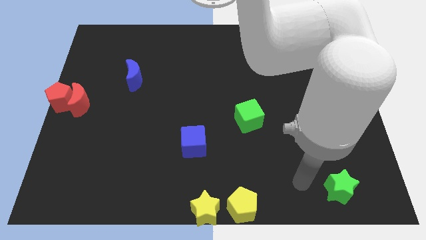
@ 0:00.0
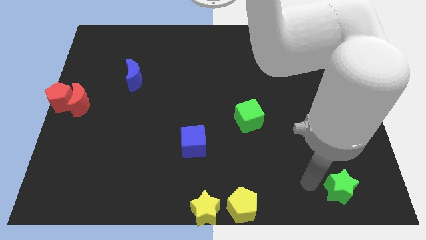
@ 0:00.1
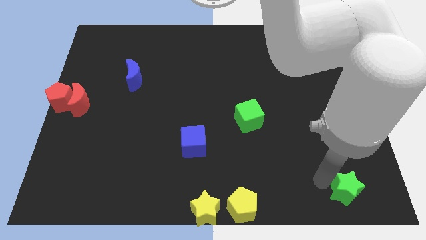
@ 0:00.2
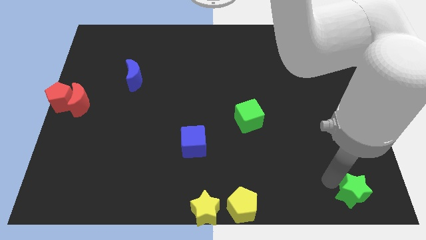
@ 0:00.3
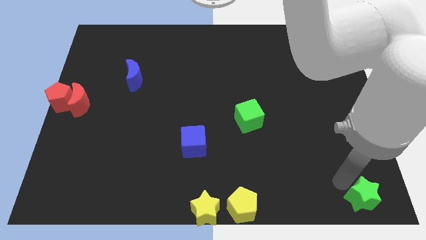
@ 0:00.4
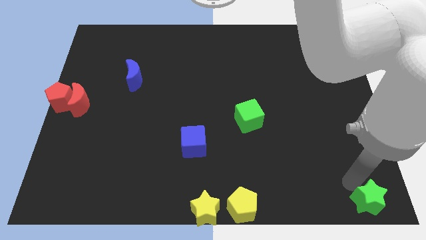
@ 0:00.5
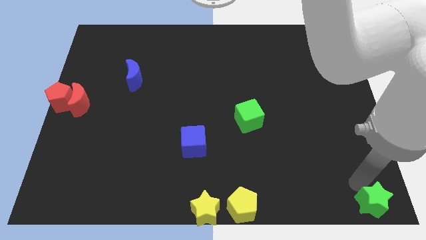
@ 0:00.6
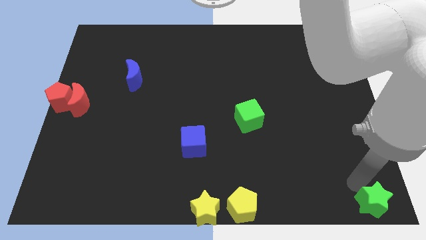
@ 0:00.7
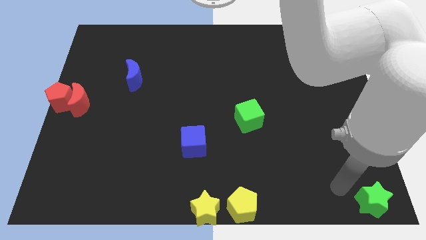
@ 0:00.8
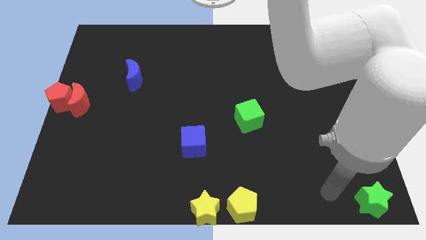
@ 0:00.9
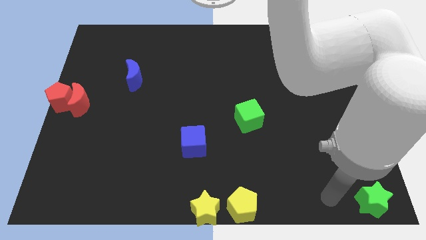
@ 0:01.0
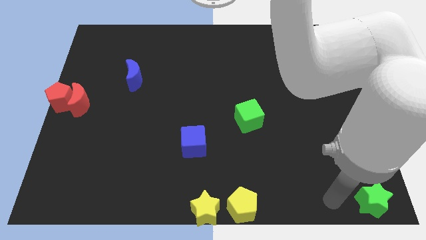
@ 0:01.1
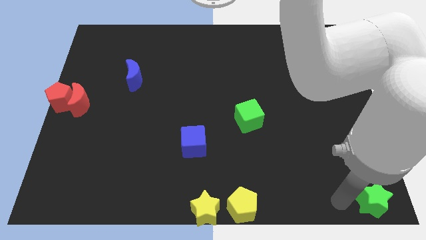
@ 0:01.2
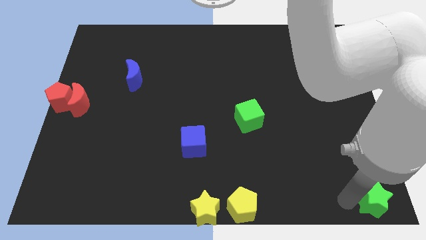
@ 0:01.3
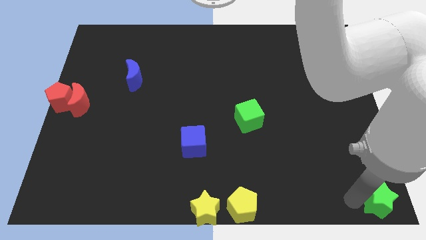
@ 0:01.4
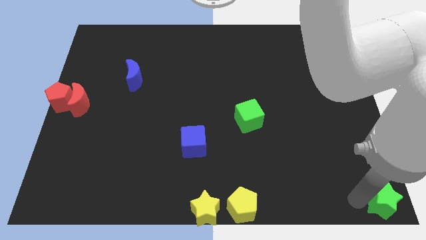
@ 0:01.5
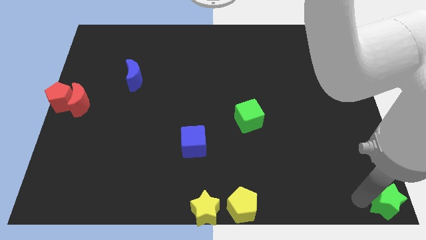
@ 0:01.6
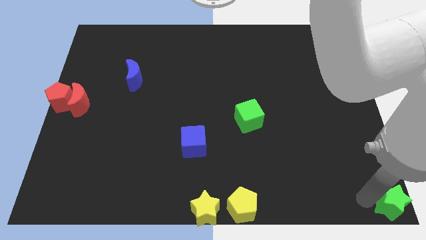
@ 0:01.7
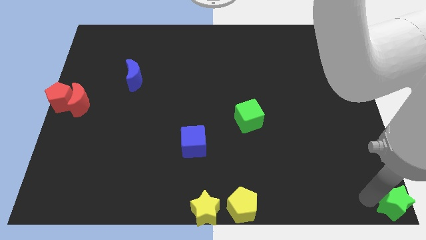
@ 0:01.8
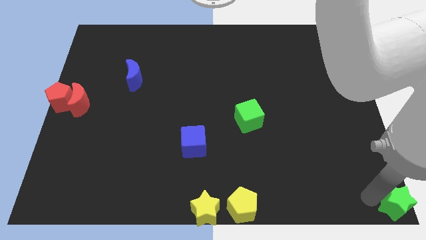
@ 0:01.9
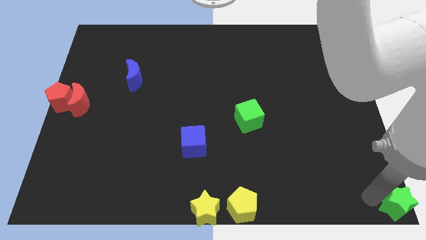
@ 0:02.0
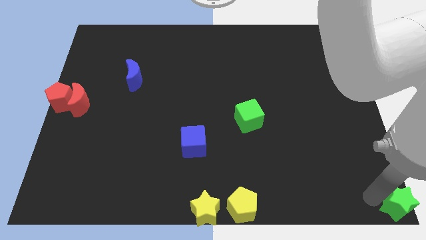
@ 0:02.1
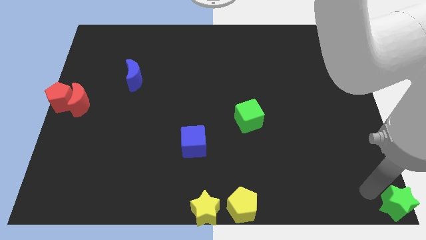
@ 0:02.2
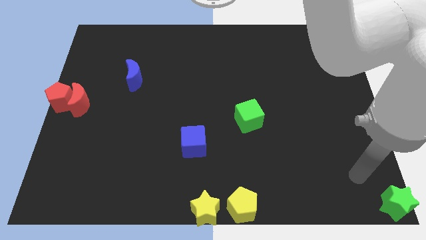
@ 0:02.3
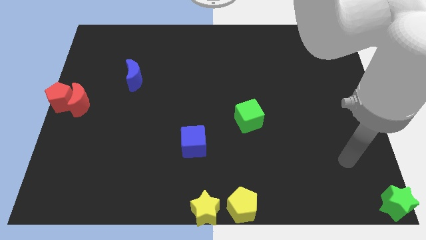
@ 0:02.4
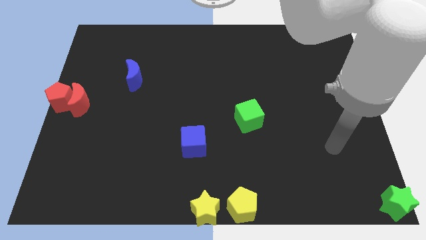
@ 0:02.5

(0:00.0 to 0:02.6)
place the green star at bottom right side of the board

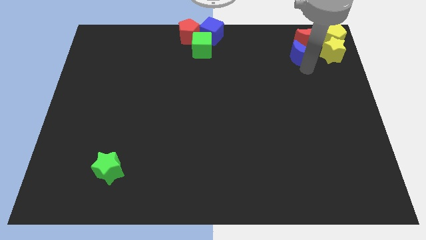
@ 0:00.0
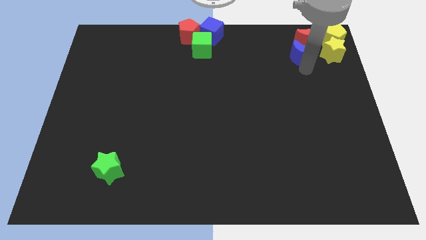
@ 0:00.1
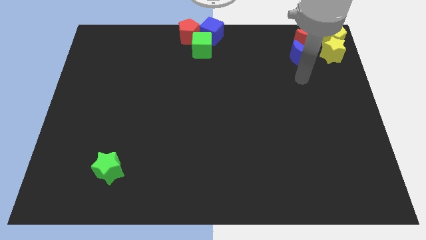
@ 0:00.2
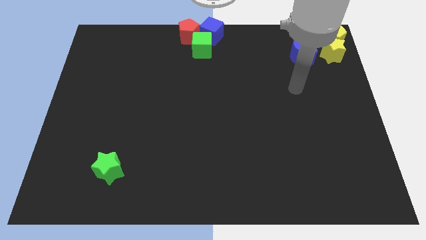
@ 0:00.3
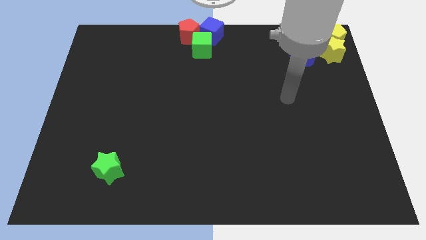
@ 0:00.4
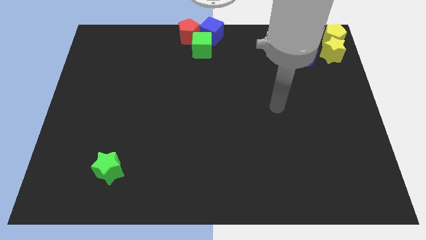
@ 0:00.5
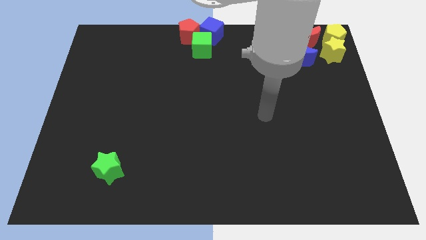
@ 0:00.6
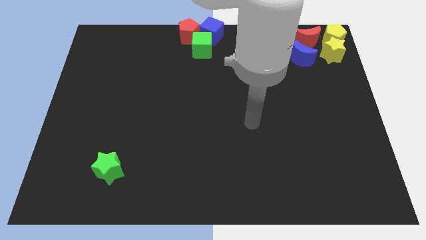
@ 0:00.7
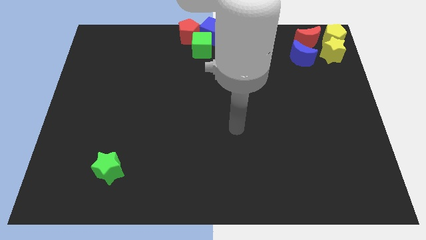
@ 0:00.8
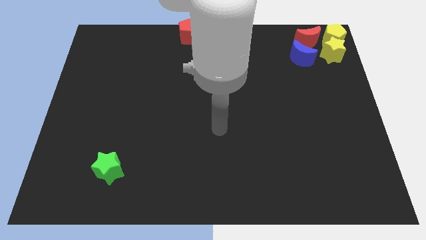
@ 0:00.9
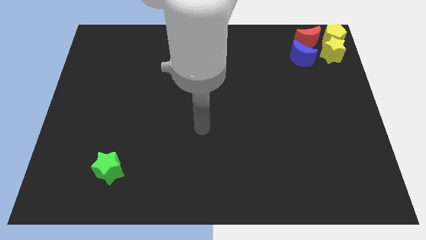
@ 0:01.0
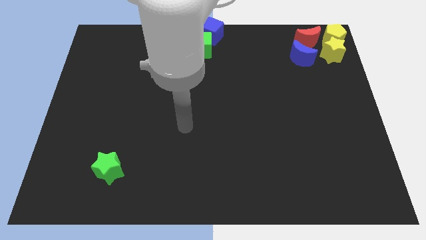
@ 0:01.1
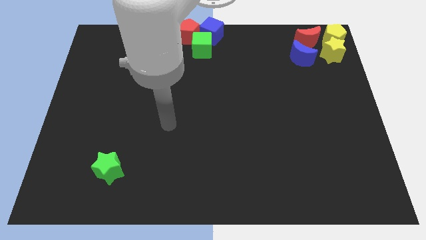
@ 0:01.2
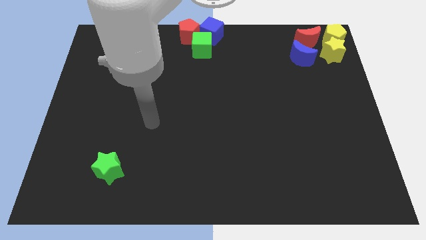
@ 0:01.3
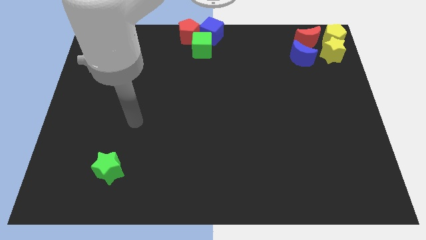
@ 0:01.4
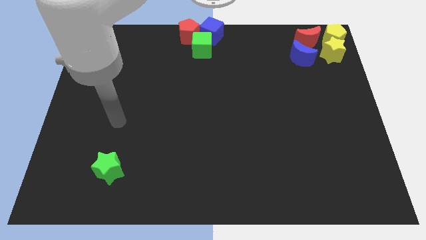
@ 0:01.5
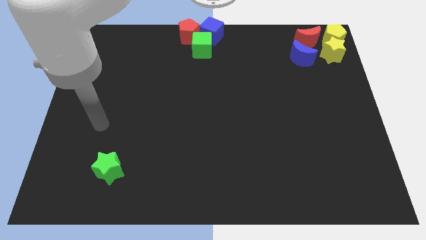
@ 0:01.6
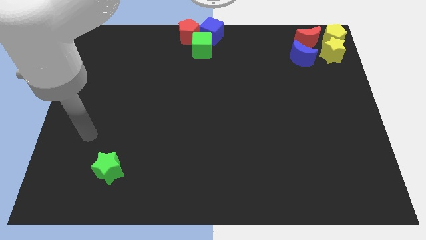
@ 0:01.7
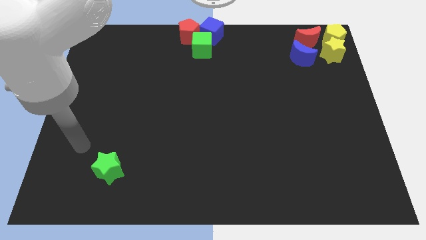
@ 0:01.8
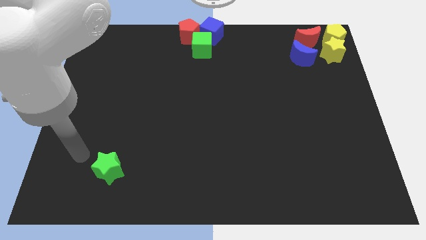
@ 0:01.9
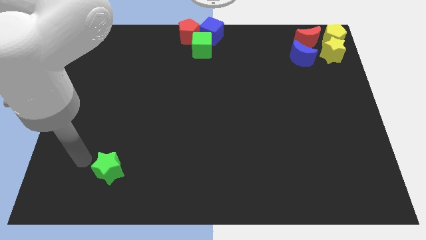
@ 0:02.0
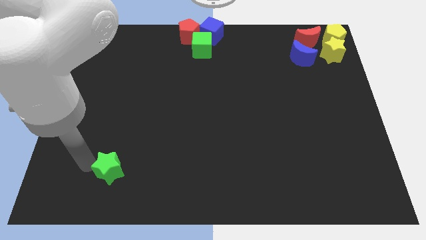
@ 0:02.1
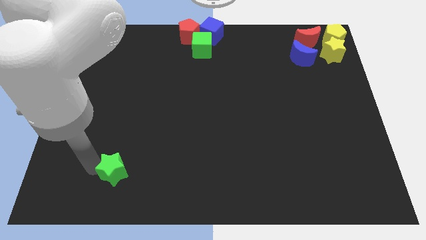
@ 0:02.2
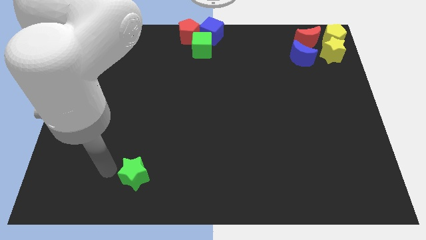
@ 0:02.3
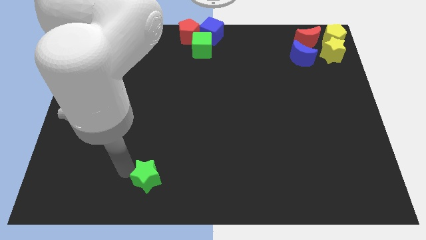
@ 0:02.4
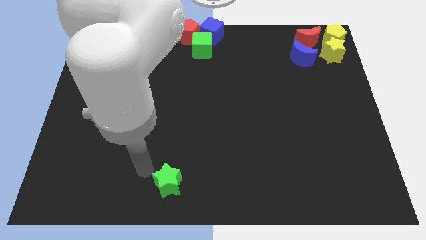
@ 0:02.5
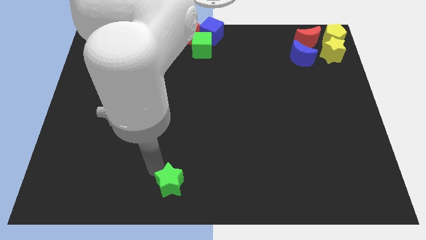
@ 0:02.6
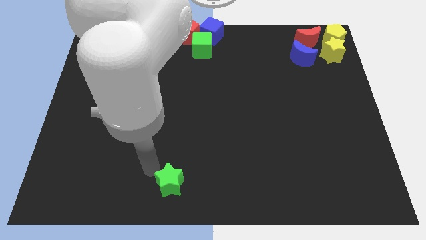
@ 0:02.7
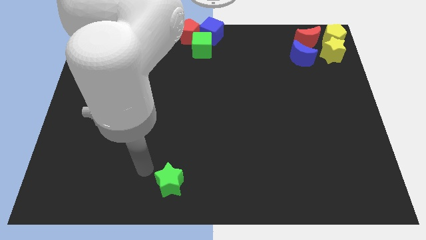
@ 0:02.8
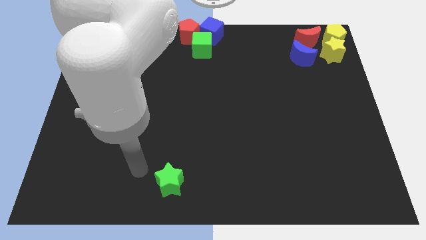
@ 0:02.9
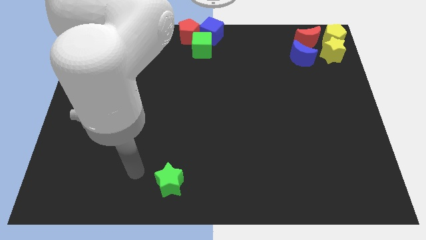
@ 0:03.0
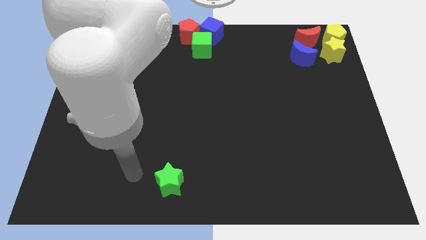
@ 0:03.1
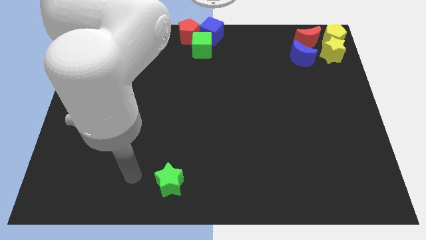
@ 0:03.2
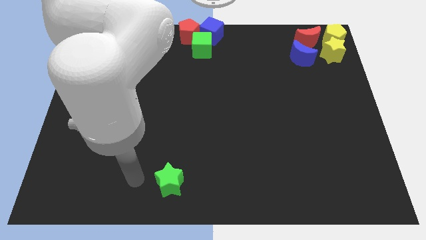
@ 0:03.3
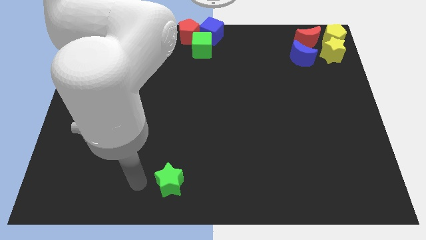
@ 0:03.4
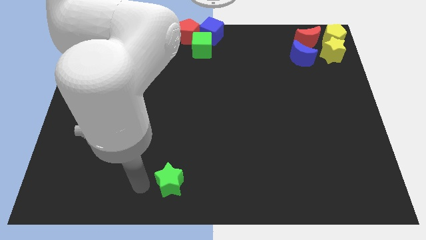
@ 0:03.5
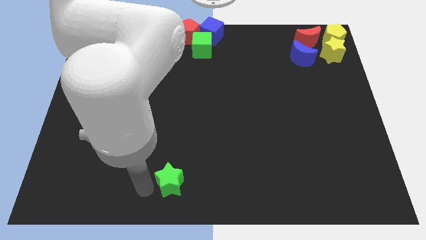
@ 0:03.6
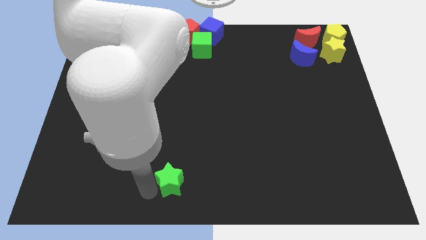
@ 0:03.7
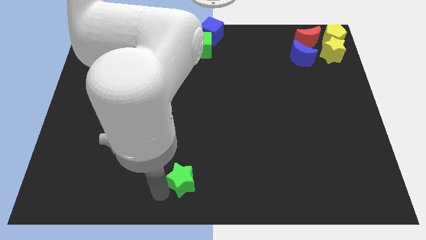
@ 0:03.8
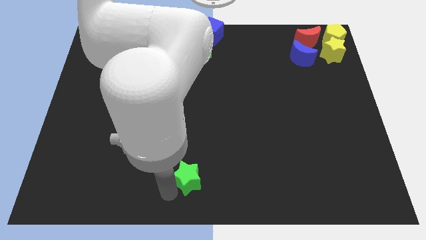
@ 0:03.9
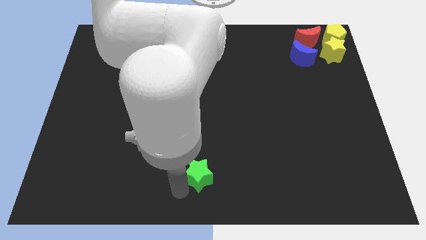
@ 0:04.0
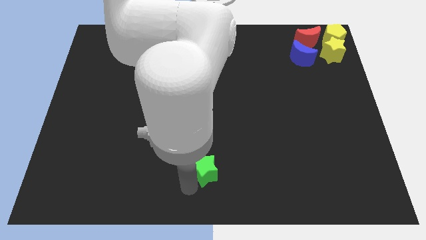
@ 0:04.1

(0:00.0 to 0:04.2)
push the green star to the bottom center

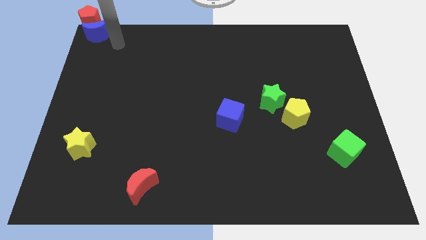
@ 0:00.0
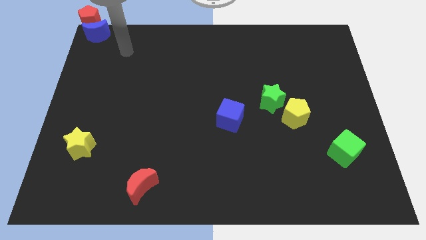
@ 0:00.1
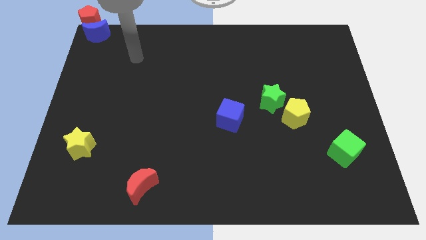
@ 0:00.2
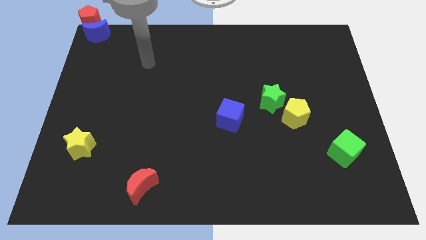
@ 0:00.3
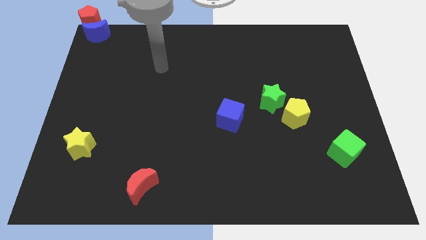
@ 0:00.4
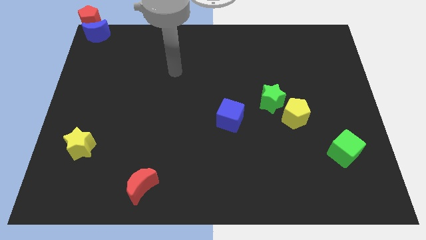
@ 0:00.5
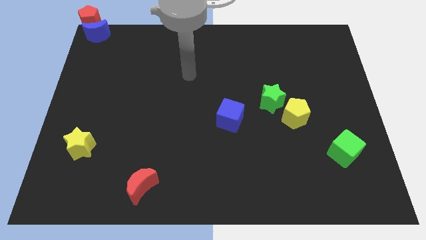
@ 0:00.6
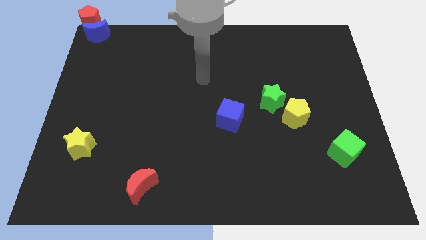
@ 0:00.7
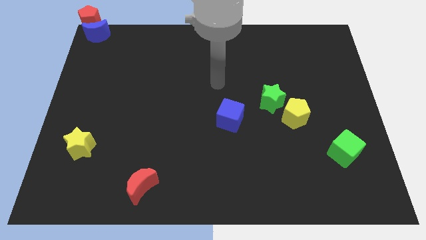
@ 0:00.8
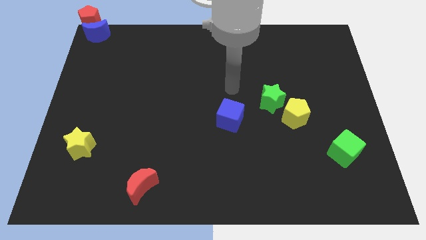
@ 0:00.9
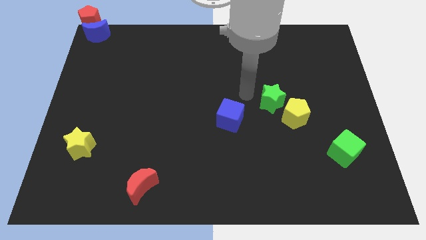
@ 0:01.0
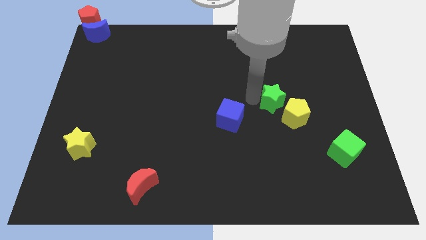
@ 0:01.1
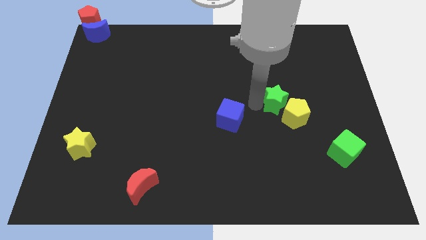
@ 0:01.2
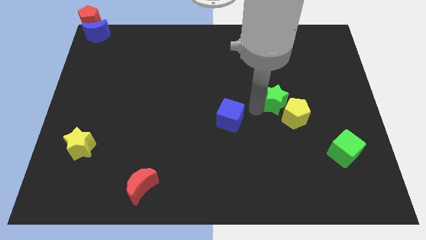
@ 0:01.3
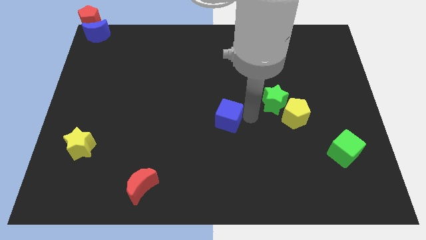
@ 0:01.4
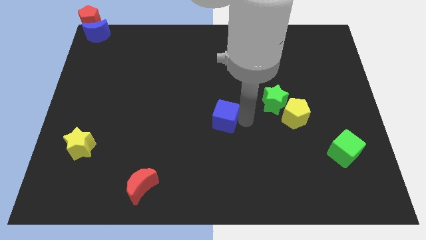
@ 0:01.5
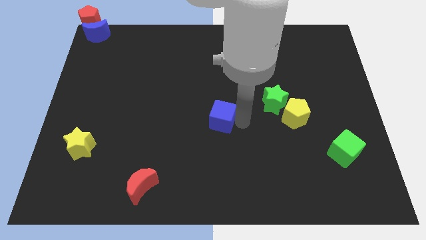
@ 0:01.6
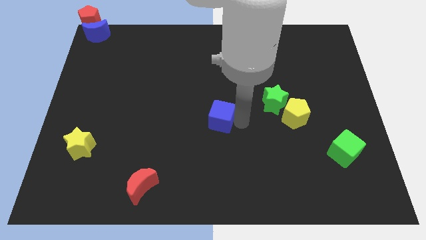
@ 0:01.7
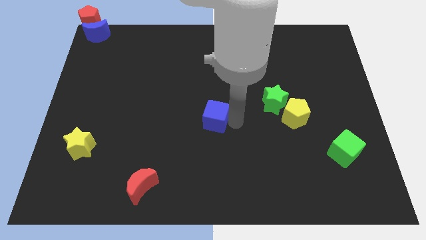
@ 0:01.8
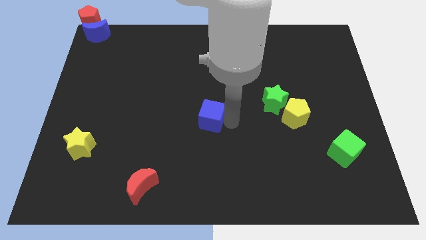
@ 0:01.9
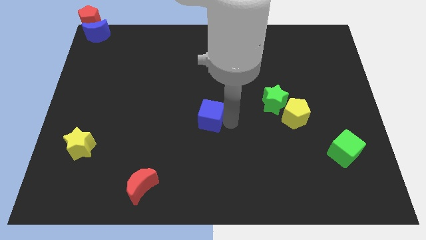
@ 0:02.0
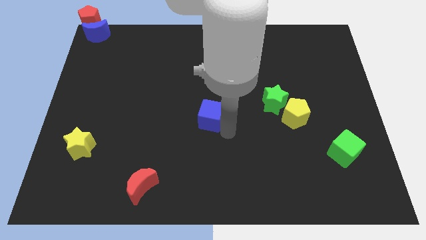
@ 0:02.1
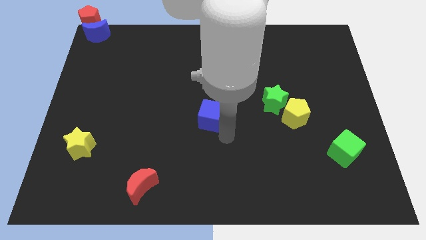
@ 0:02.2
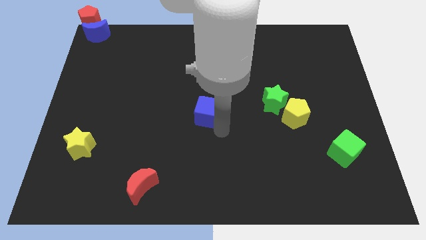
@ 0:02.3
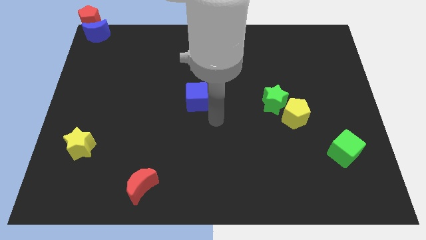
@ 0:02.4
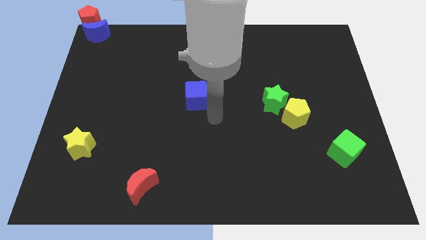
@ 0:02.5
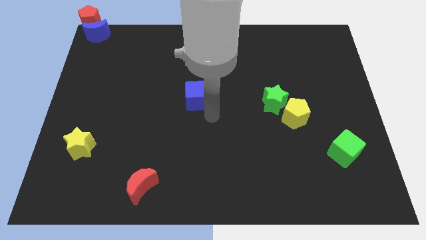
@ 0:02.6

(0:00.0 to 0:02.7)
move blue cube to the center
